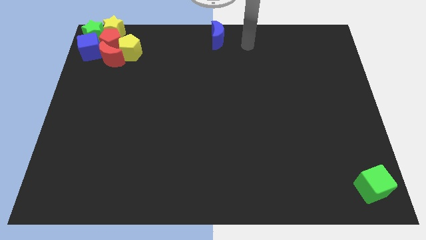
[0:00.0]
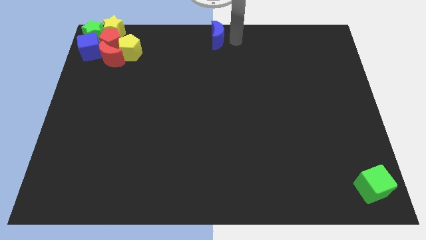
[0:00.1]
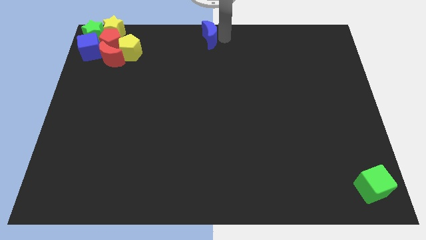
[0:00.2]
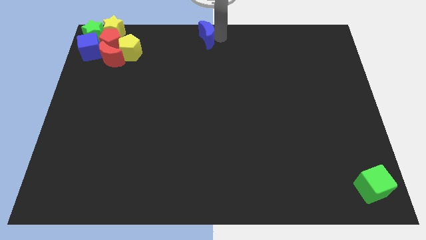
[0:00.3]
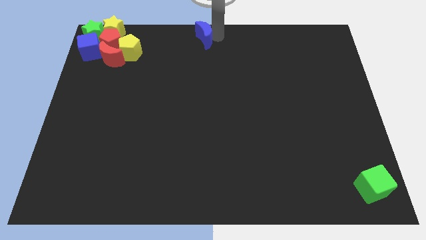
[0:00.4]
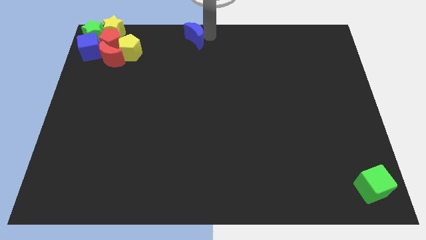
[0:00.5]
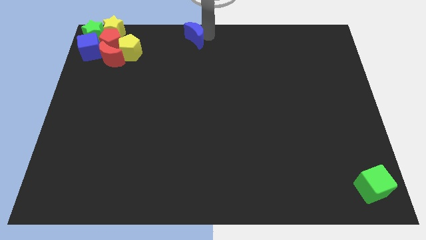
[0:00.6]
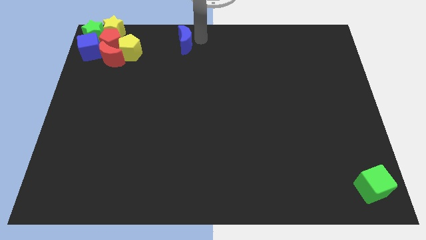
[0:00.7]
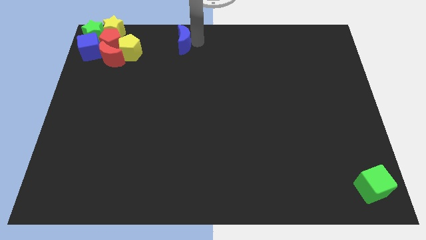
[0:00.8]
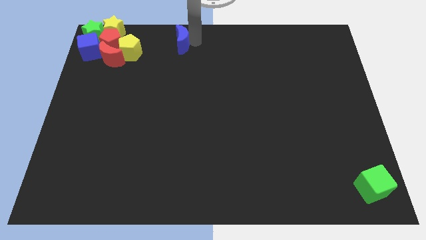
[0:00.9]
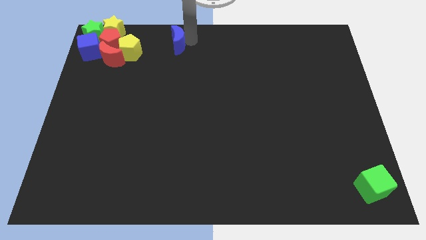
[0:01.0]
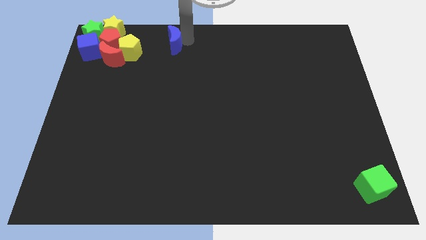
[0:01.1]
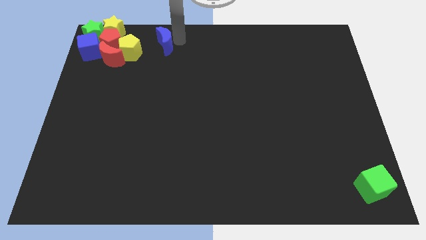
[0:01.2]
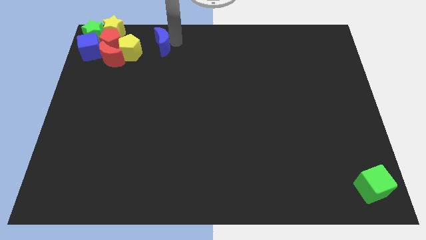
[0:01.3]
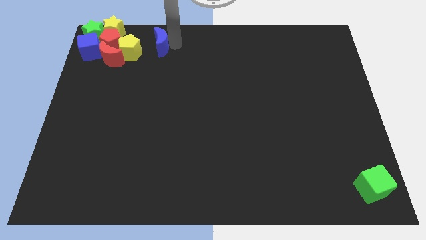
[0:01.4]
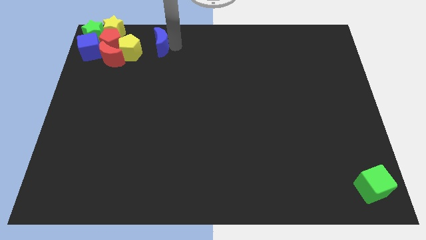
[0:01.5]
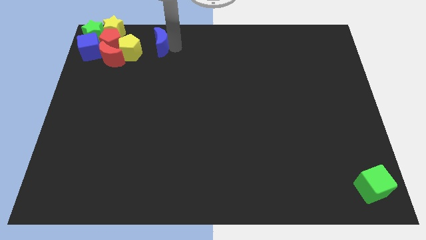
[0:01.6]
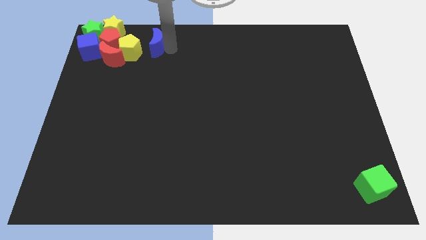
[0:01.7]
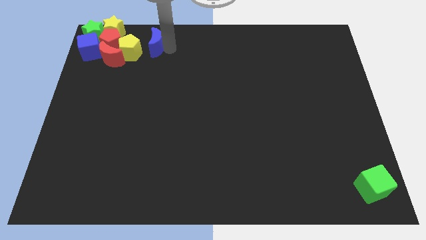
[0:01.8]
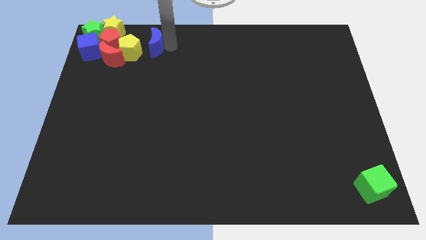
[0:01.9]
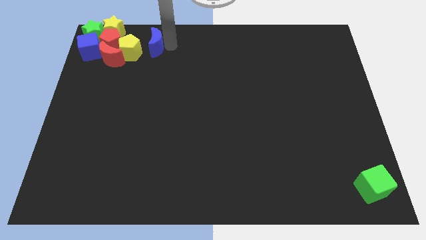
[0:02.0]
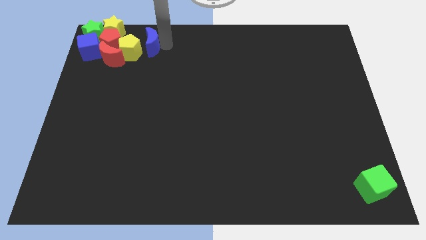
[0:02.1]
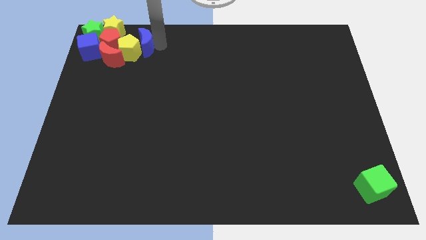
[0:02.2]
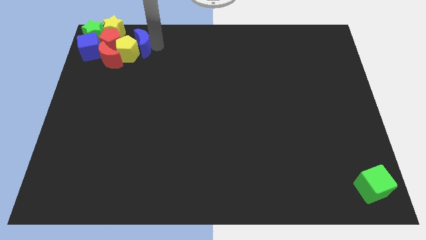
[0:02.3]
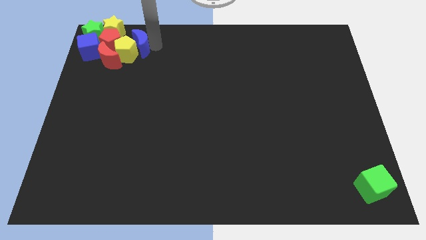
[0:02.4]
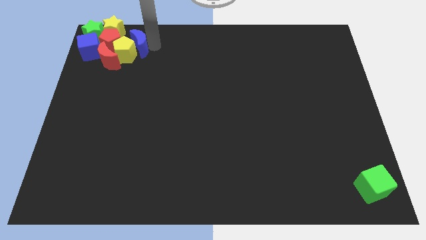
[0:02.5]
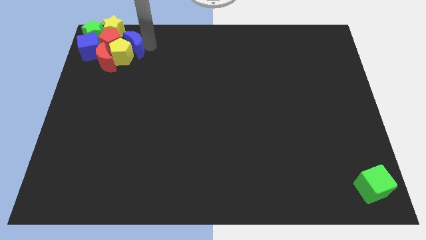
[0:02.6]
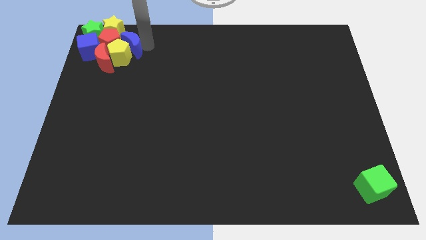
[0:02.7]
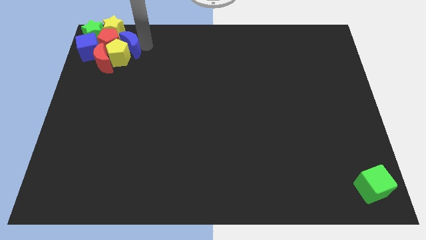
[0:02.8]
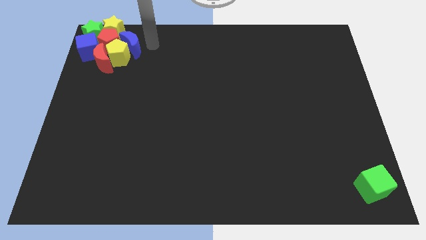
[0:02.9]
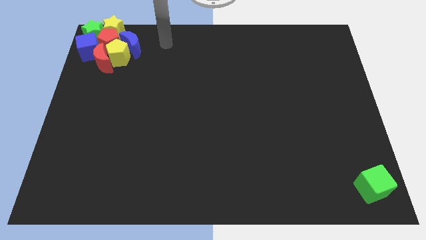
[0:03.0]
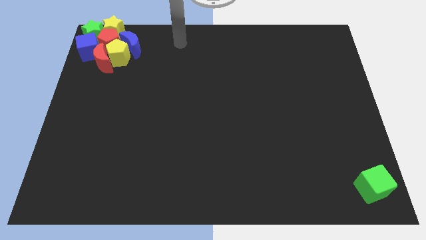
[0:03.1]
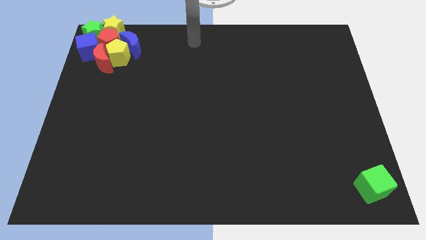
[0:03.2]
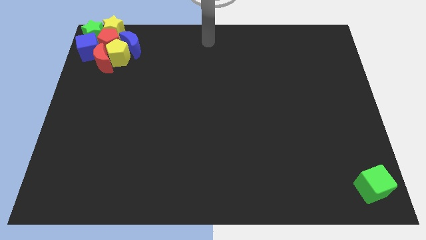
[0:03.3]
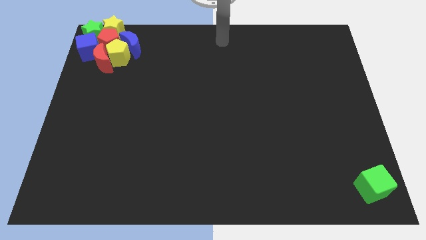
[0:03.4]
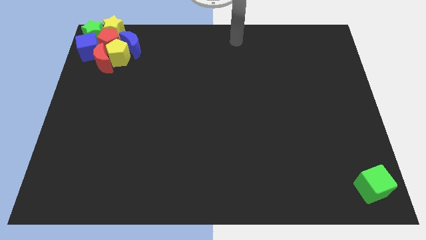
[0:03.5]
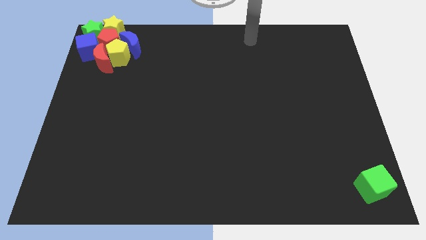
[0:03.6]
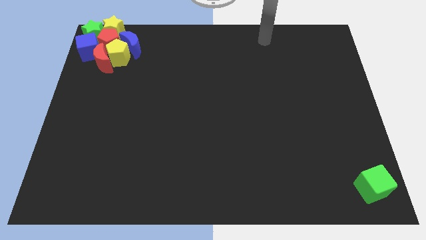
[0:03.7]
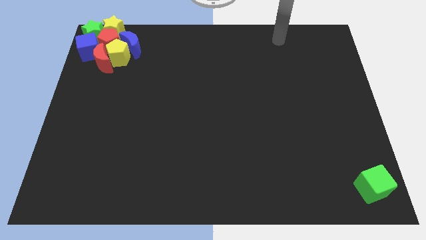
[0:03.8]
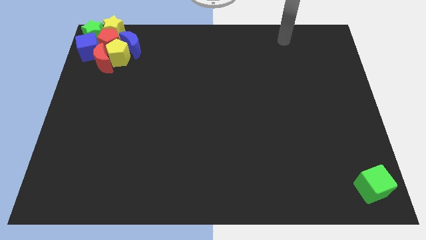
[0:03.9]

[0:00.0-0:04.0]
push the blue crescent into the group of blocks

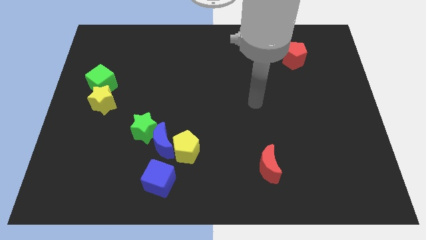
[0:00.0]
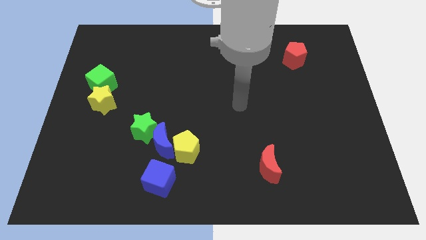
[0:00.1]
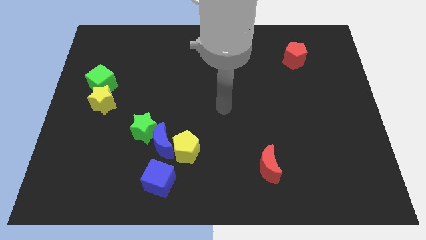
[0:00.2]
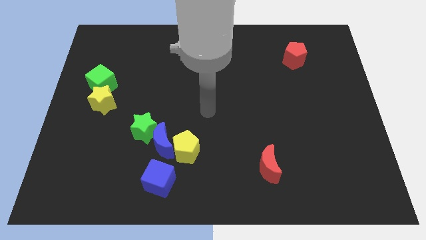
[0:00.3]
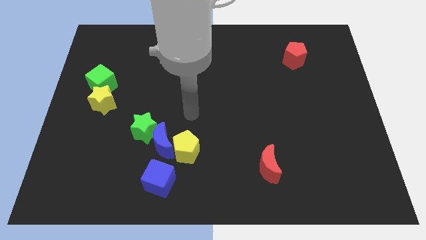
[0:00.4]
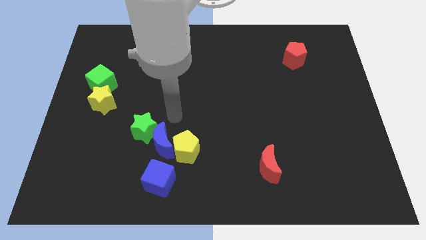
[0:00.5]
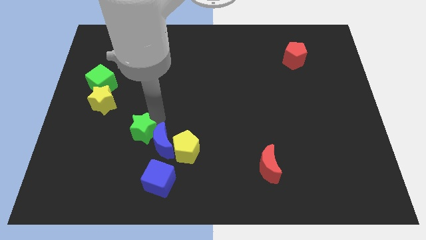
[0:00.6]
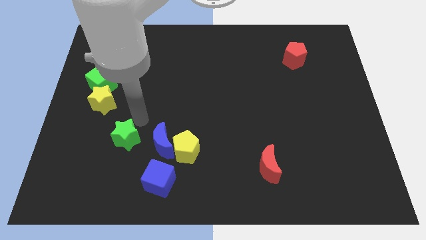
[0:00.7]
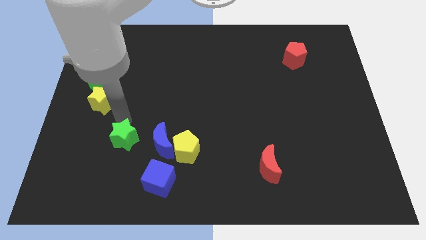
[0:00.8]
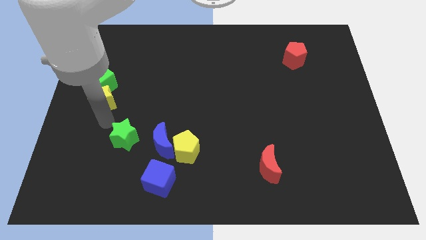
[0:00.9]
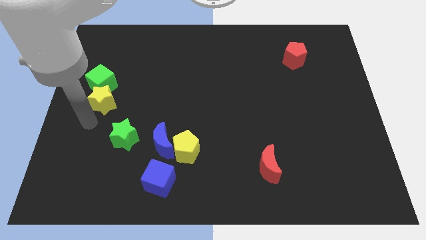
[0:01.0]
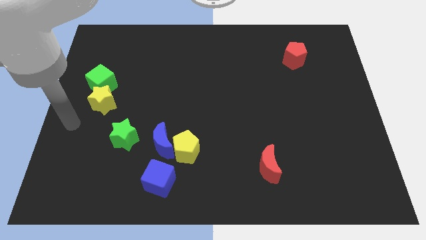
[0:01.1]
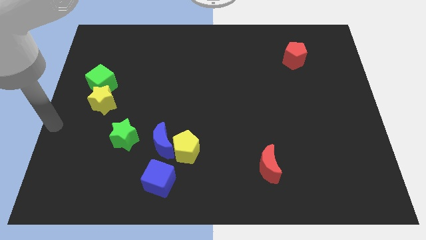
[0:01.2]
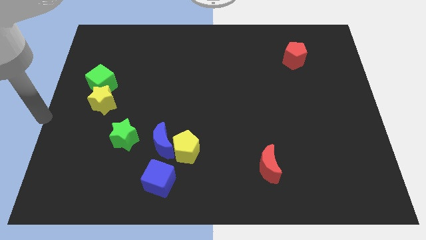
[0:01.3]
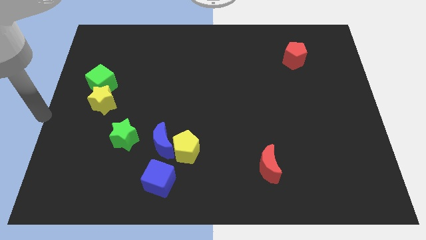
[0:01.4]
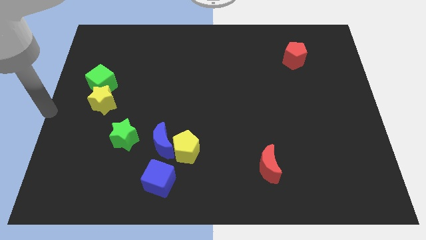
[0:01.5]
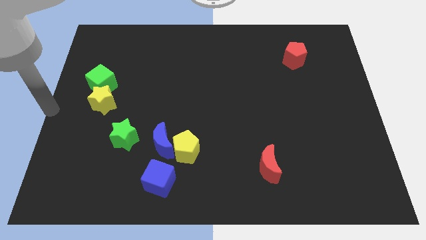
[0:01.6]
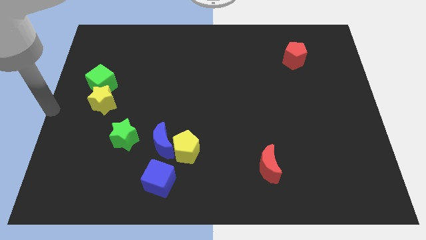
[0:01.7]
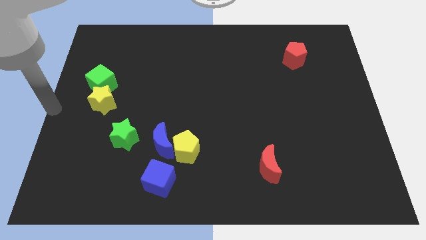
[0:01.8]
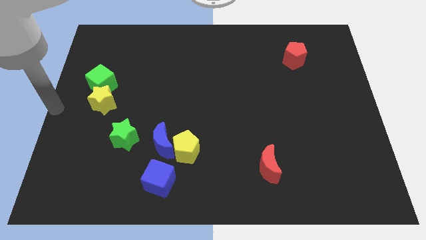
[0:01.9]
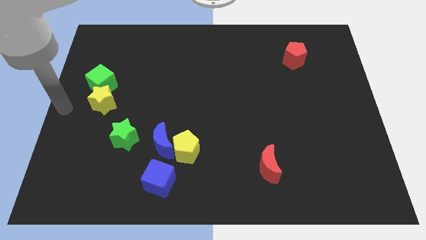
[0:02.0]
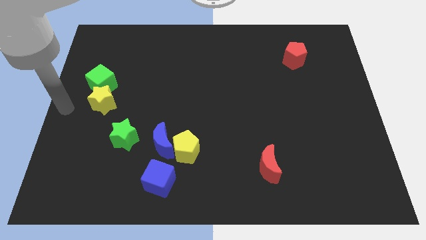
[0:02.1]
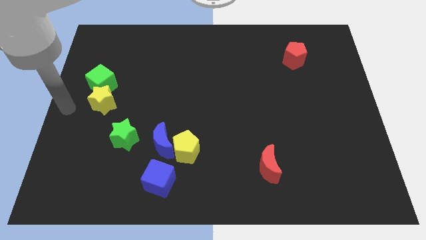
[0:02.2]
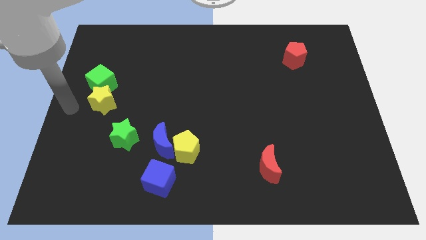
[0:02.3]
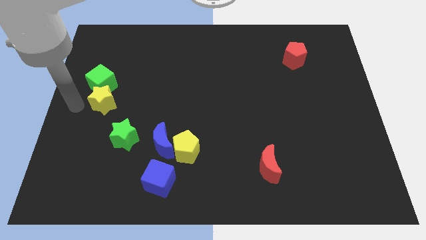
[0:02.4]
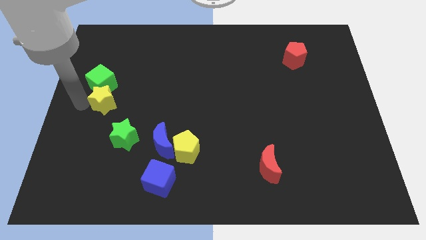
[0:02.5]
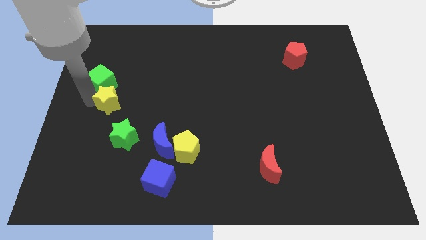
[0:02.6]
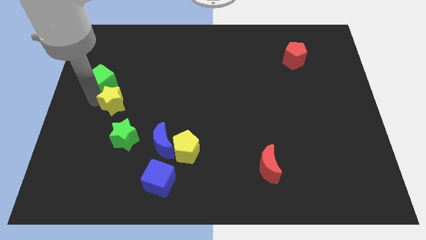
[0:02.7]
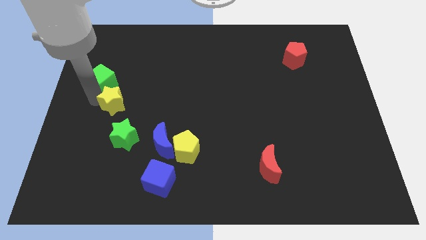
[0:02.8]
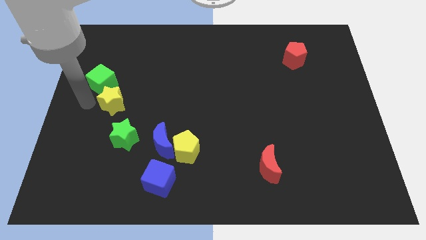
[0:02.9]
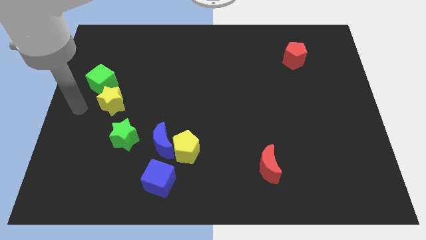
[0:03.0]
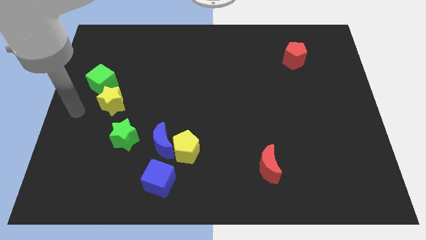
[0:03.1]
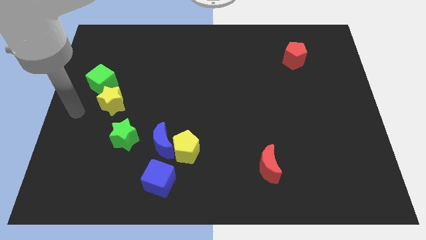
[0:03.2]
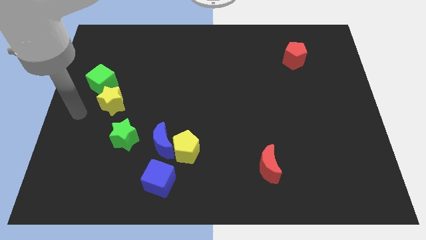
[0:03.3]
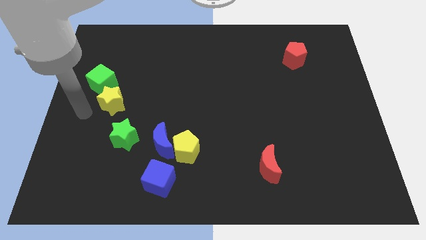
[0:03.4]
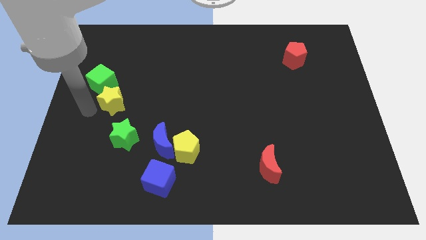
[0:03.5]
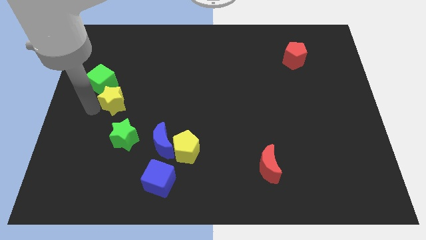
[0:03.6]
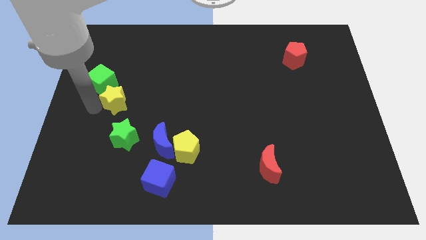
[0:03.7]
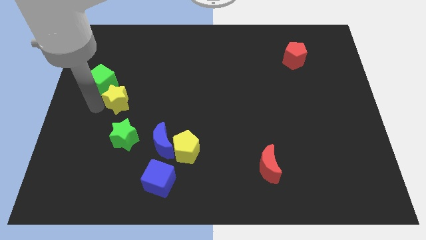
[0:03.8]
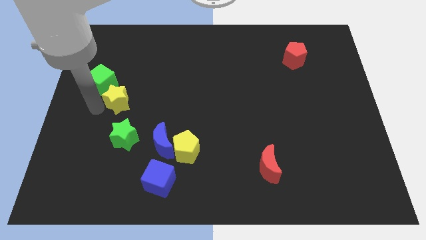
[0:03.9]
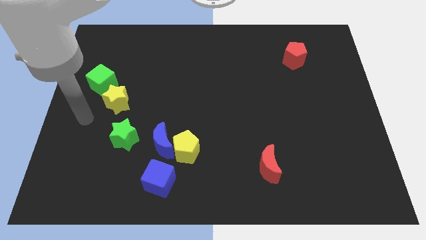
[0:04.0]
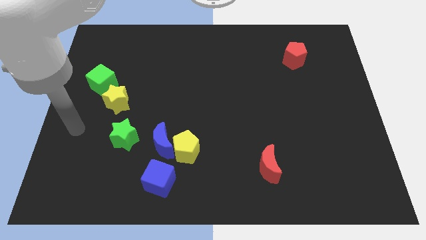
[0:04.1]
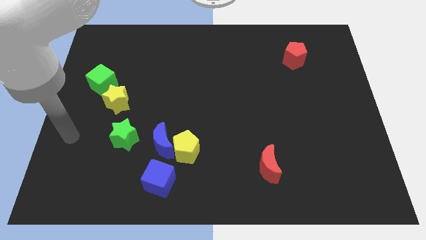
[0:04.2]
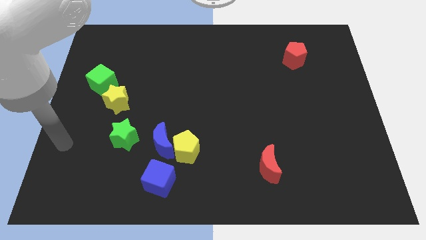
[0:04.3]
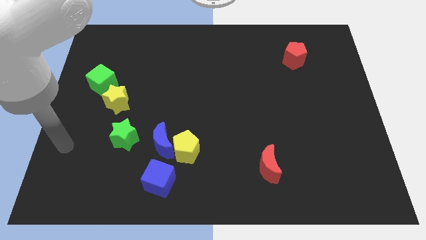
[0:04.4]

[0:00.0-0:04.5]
push the yellow star to the bottom right of the green cube

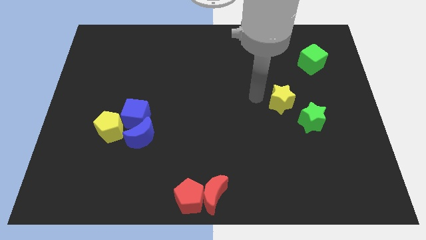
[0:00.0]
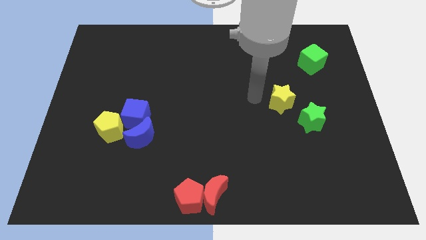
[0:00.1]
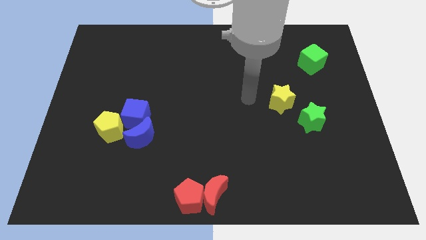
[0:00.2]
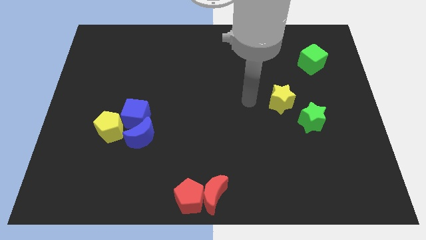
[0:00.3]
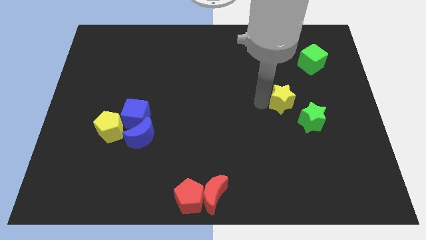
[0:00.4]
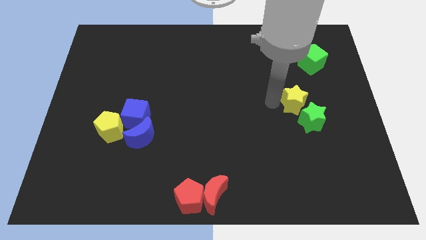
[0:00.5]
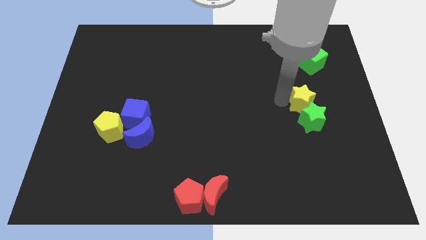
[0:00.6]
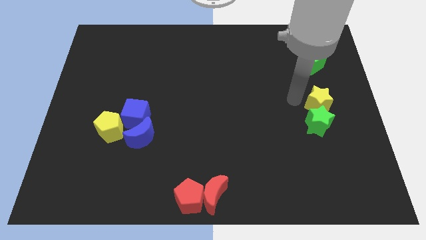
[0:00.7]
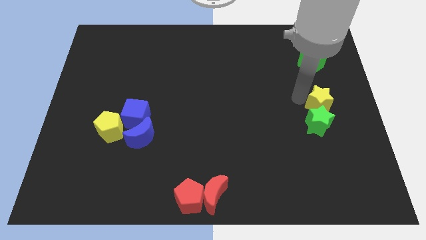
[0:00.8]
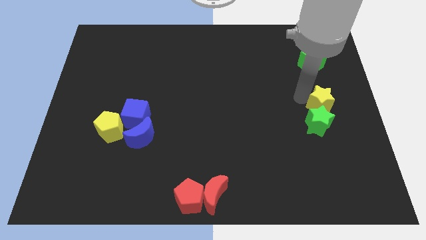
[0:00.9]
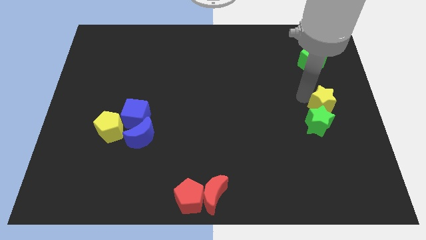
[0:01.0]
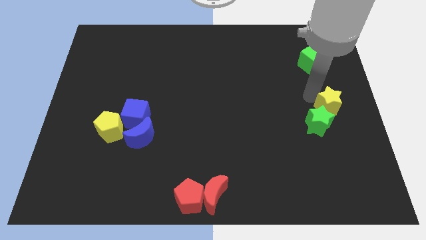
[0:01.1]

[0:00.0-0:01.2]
place the yellow star above the green star
